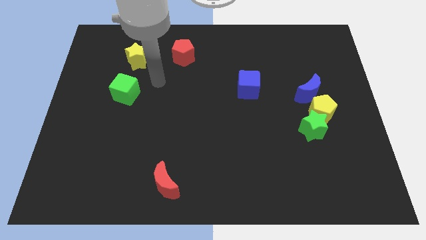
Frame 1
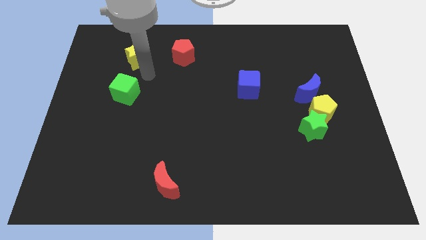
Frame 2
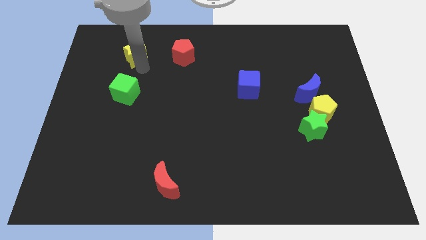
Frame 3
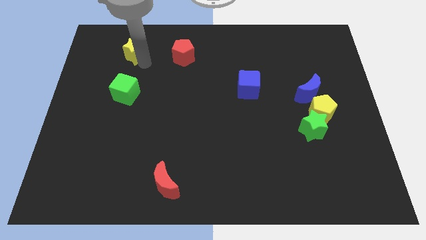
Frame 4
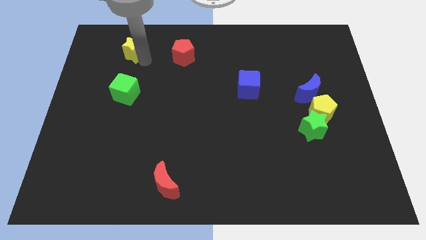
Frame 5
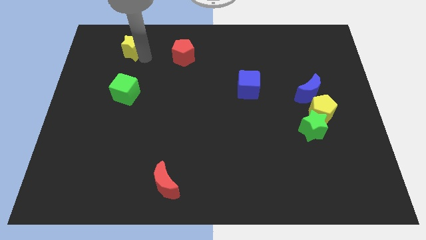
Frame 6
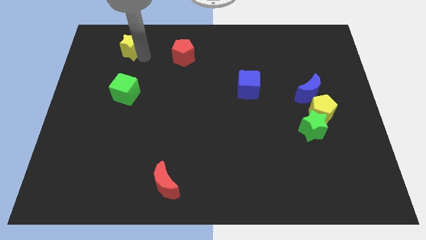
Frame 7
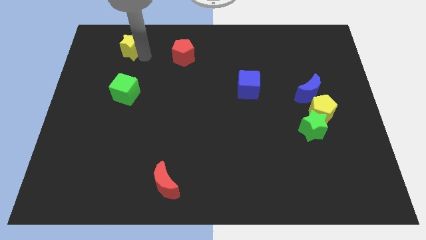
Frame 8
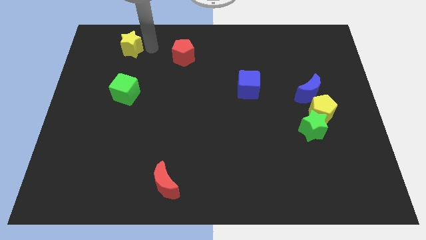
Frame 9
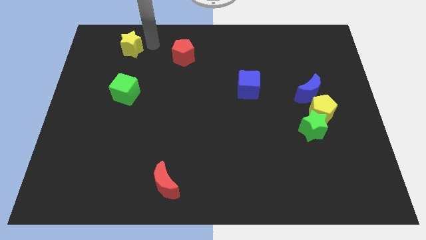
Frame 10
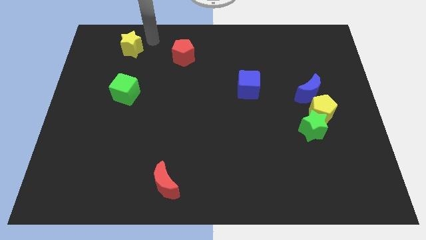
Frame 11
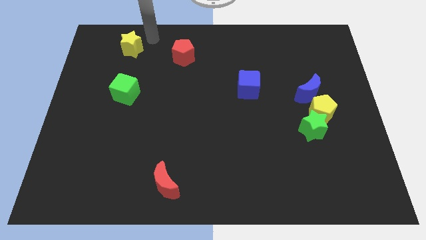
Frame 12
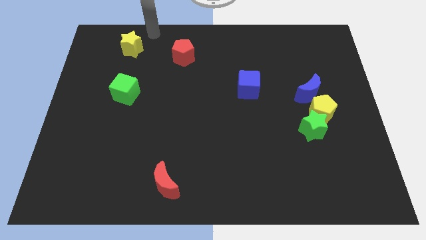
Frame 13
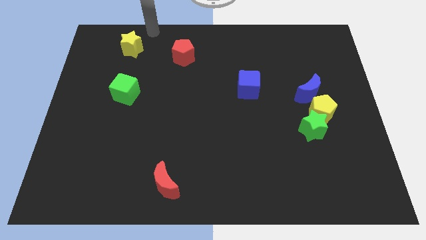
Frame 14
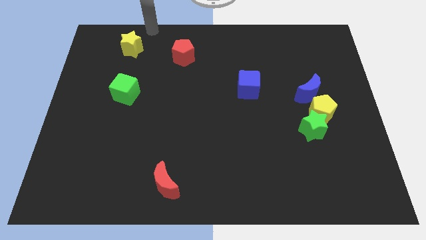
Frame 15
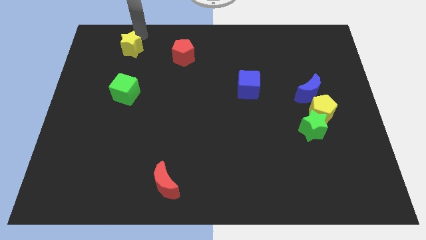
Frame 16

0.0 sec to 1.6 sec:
adjust the yellow star vertically above the green cube

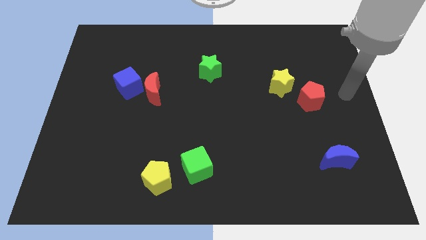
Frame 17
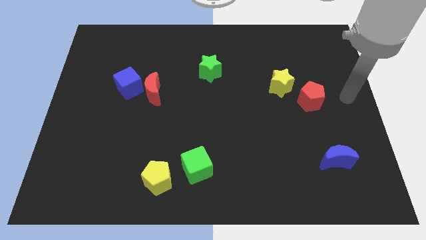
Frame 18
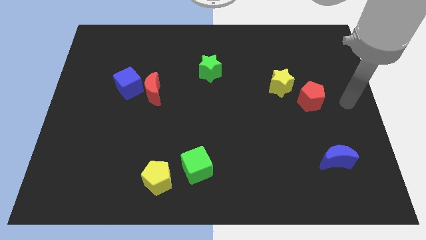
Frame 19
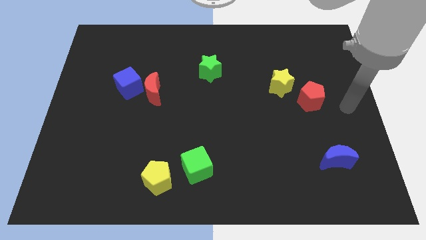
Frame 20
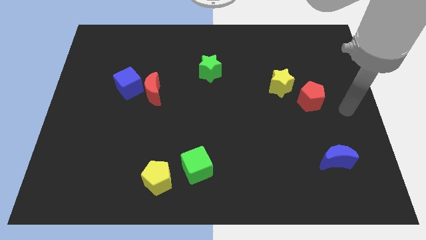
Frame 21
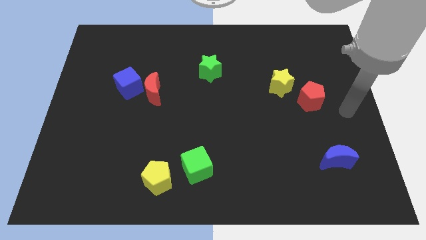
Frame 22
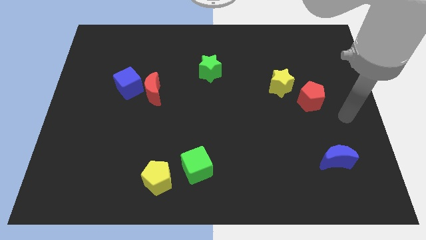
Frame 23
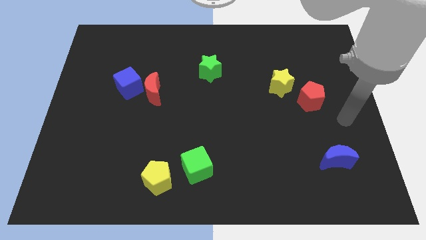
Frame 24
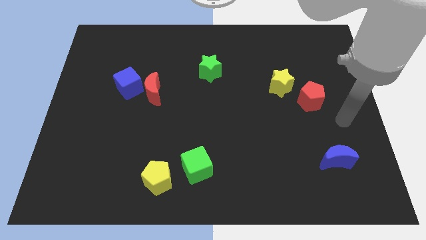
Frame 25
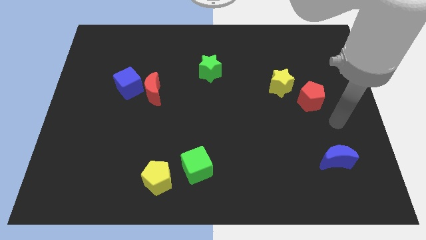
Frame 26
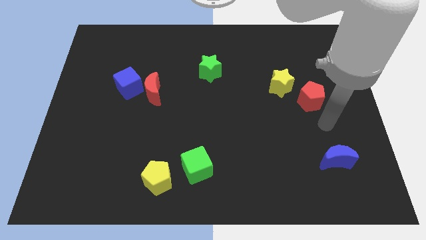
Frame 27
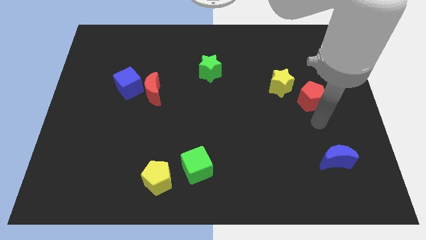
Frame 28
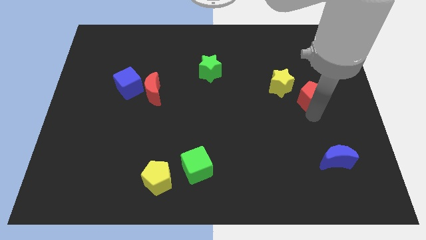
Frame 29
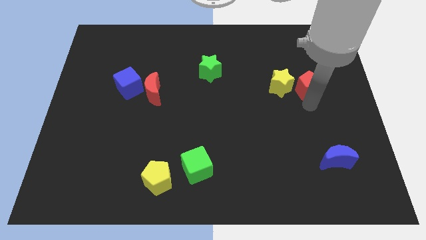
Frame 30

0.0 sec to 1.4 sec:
place the arm down to the red pentagon

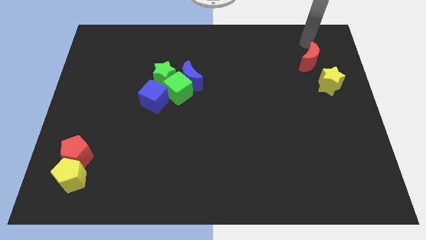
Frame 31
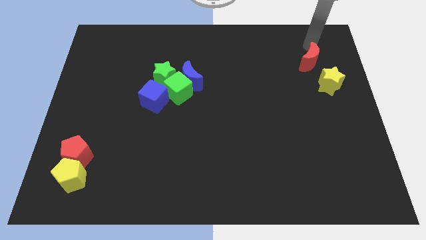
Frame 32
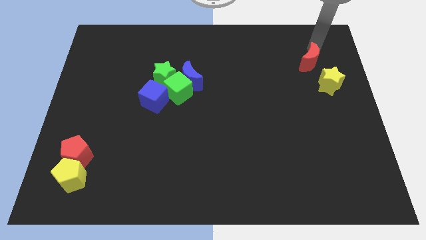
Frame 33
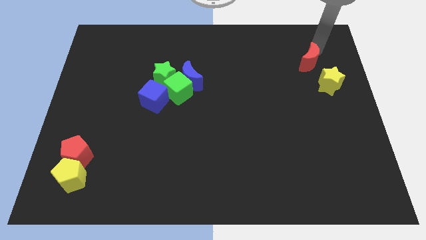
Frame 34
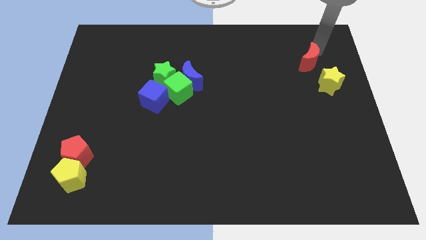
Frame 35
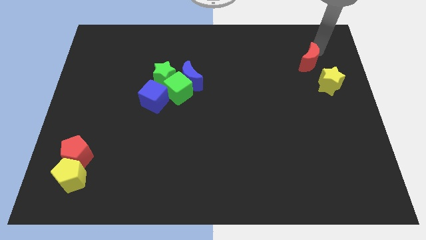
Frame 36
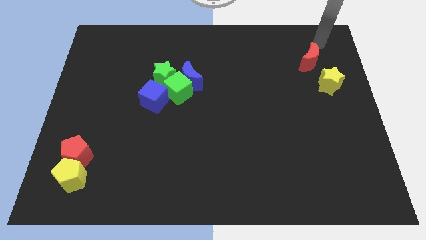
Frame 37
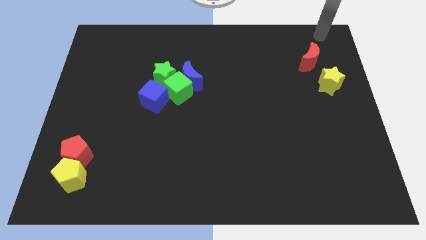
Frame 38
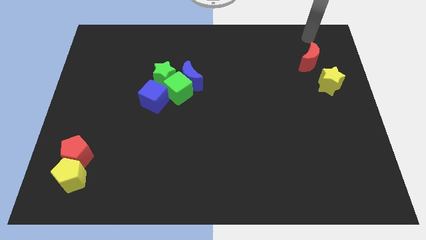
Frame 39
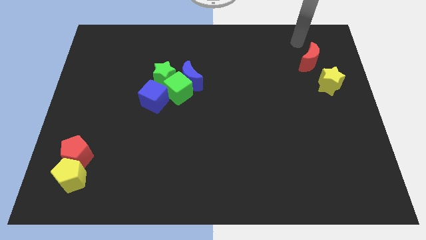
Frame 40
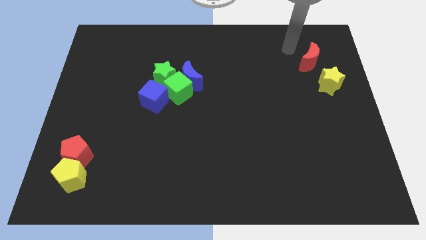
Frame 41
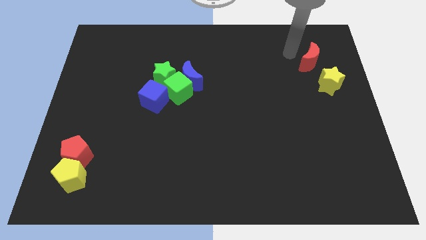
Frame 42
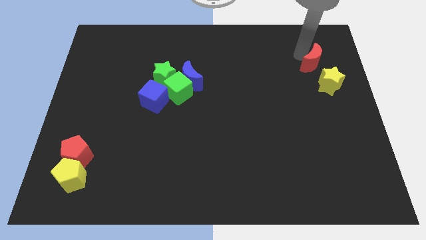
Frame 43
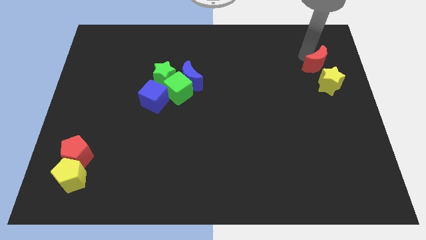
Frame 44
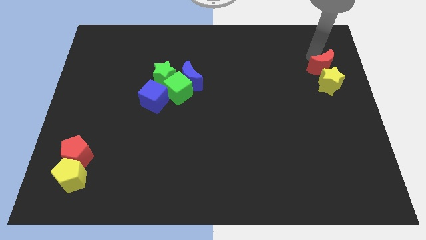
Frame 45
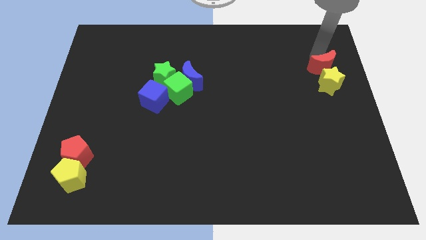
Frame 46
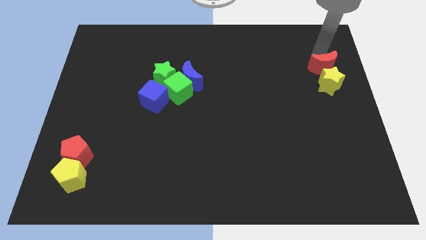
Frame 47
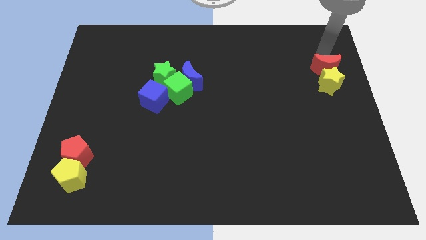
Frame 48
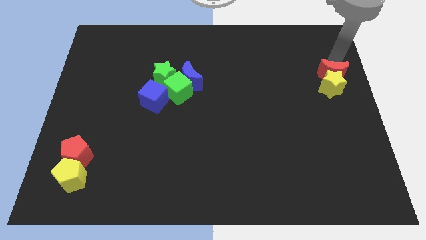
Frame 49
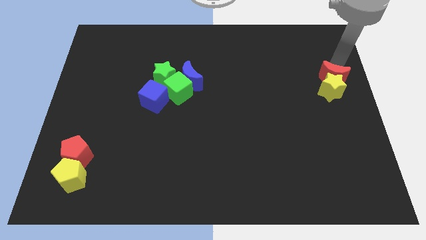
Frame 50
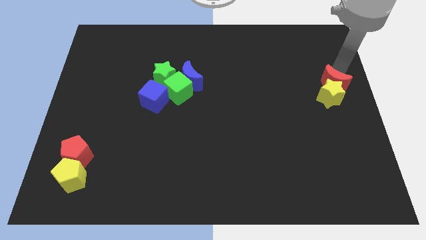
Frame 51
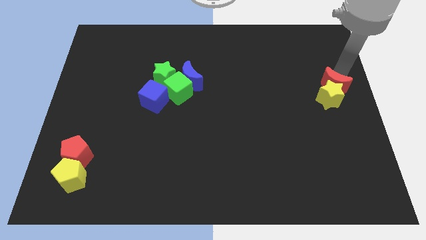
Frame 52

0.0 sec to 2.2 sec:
put the red moon into the yellow star

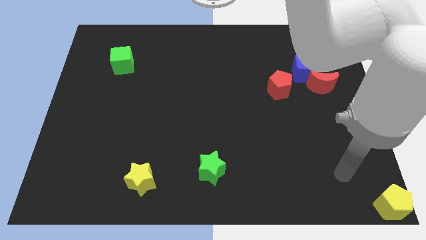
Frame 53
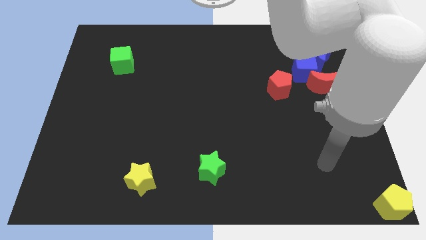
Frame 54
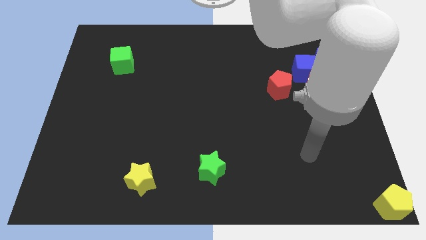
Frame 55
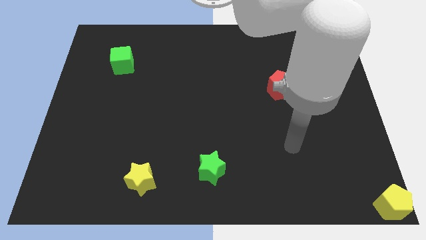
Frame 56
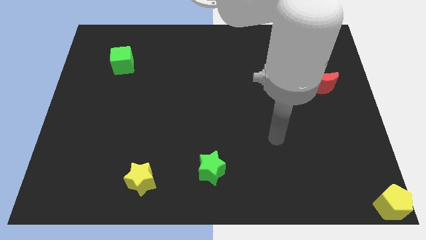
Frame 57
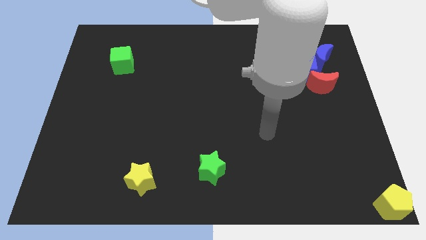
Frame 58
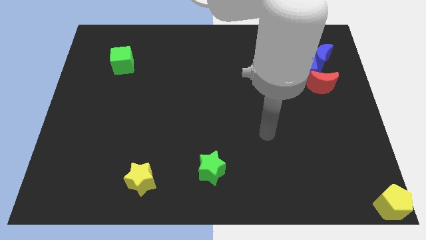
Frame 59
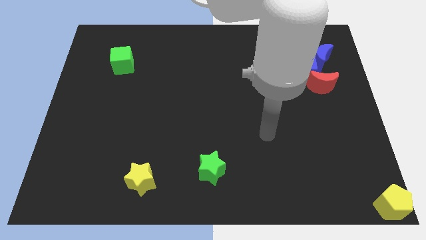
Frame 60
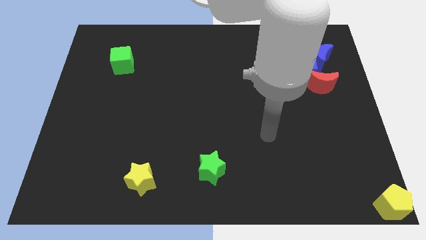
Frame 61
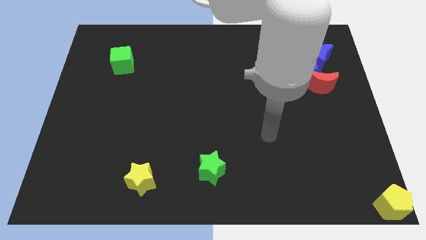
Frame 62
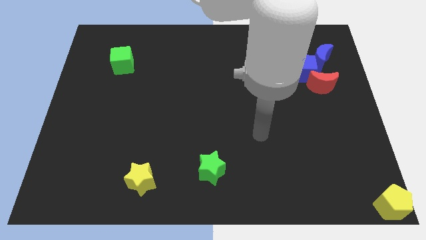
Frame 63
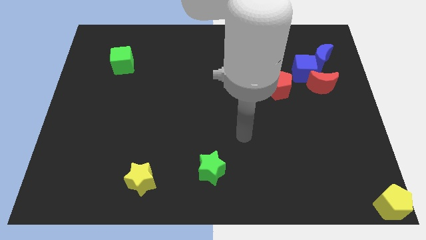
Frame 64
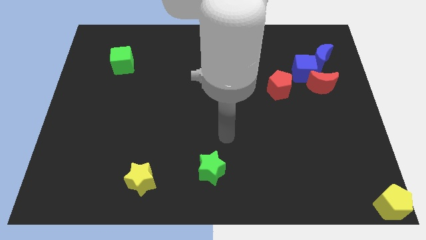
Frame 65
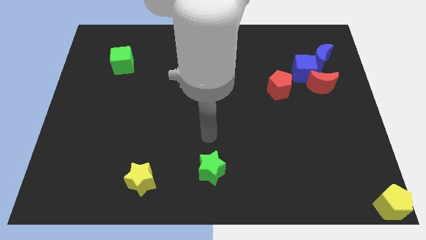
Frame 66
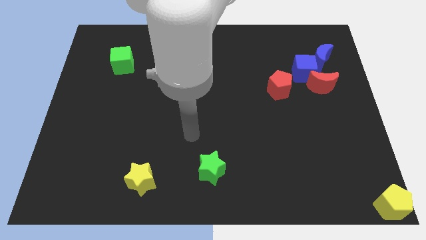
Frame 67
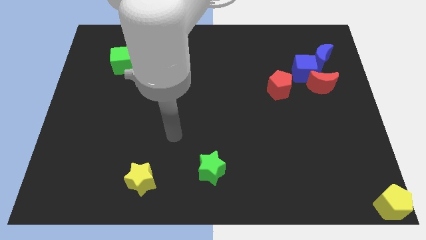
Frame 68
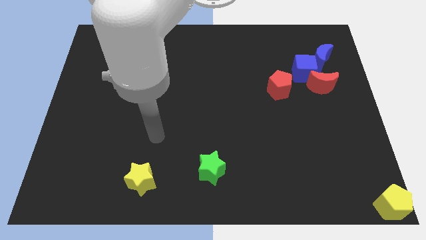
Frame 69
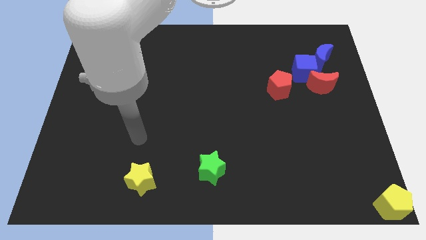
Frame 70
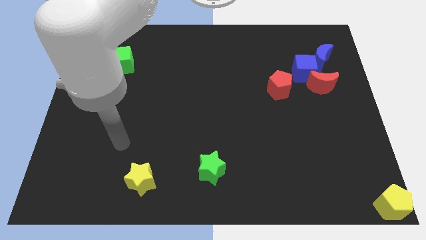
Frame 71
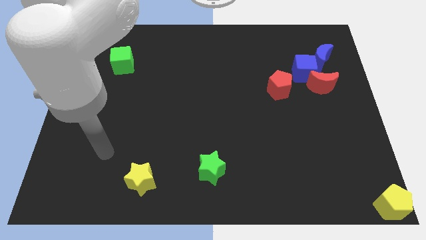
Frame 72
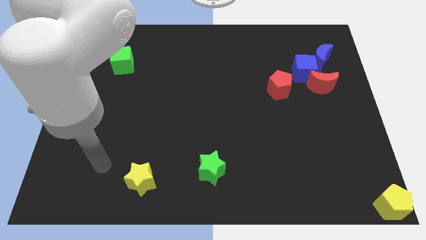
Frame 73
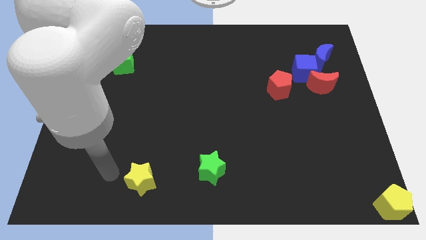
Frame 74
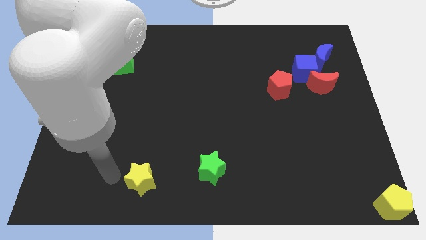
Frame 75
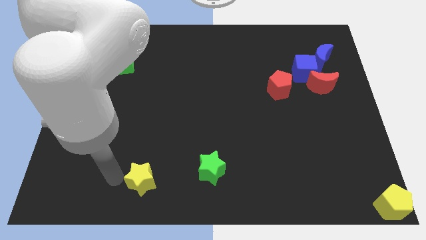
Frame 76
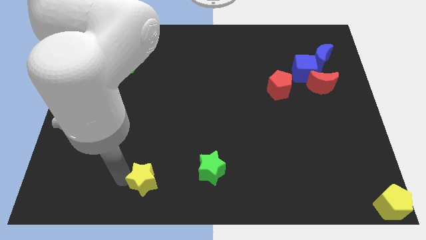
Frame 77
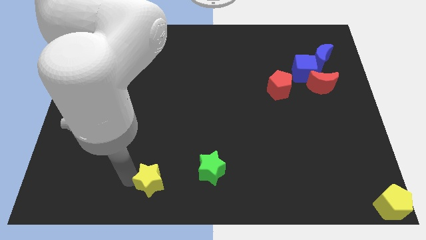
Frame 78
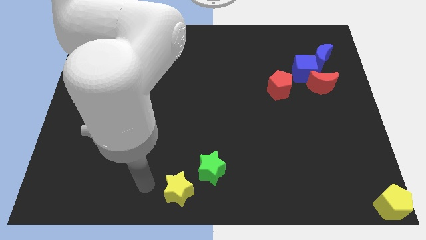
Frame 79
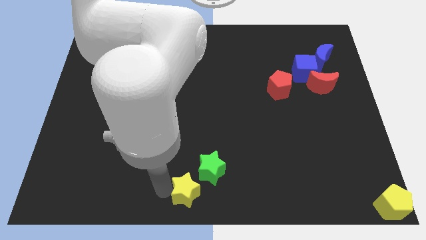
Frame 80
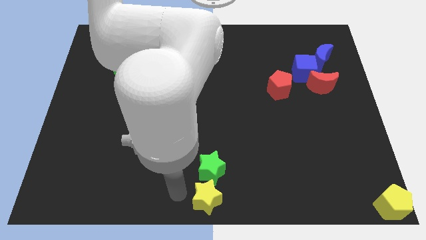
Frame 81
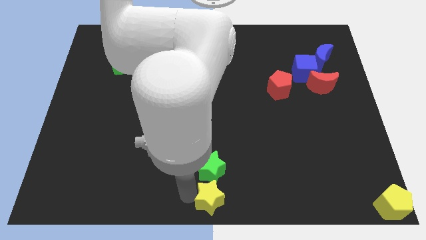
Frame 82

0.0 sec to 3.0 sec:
move the yellow star vertically below the green star

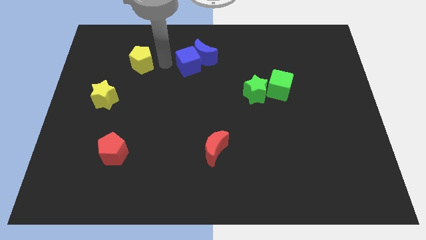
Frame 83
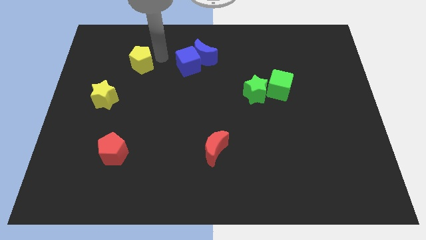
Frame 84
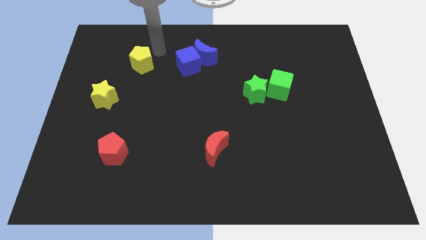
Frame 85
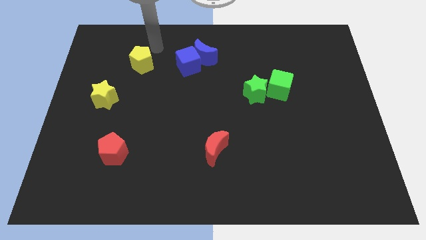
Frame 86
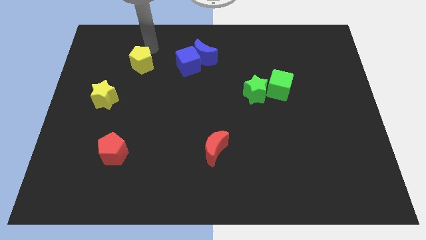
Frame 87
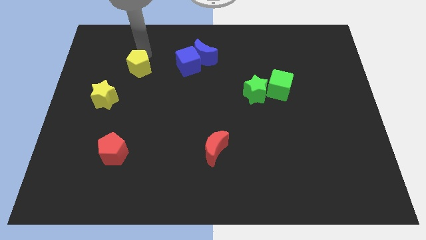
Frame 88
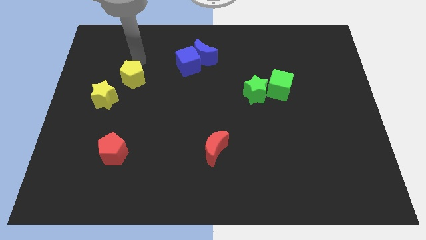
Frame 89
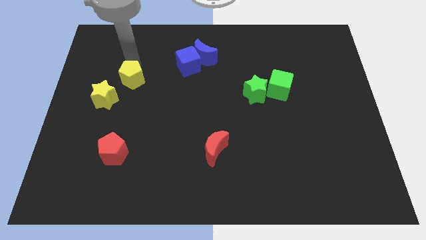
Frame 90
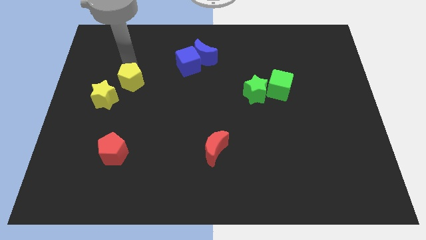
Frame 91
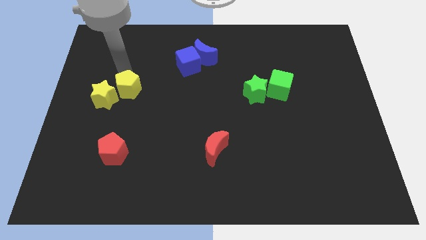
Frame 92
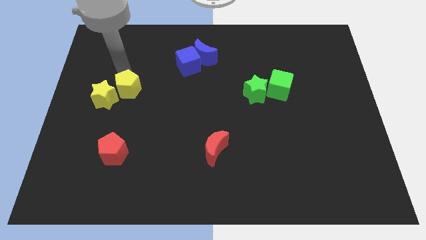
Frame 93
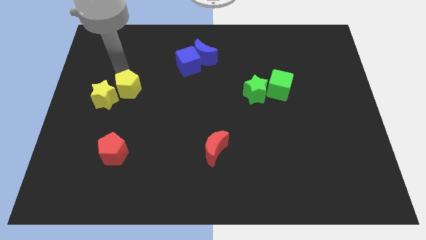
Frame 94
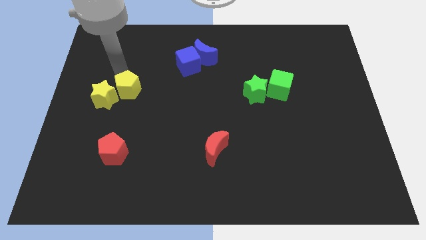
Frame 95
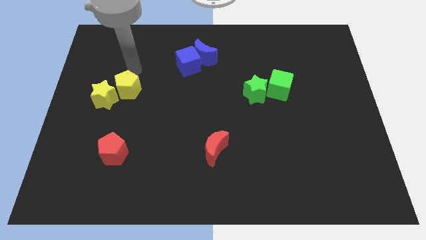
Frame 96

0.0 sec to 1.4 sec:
push the yellow pentagon towards the yellow star
